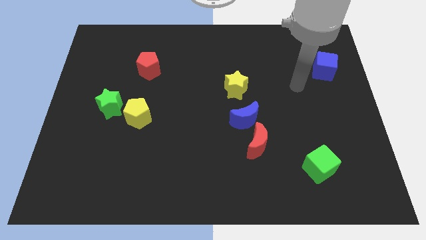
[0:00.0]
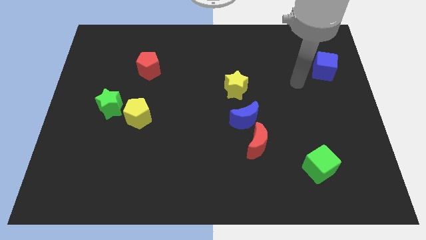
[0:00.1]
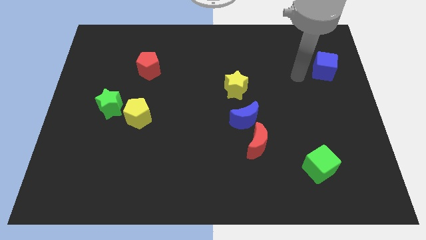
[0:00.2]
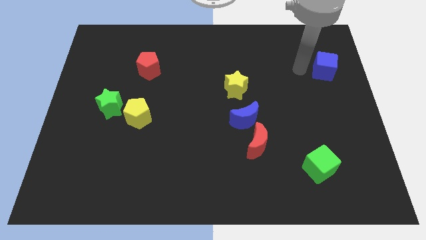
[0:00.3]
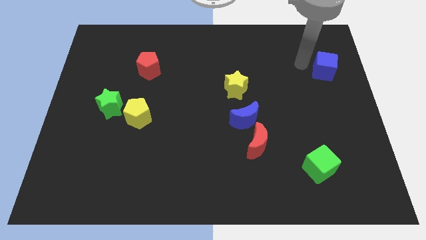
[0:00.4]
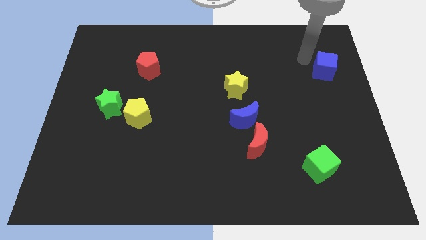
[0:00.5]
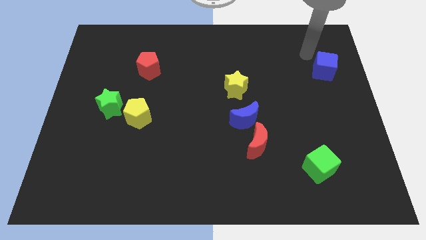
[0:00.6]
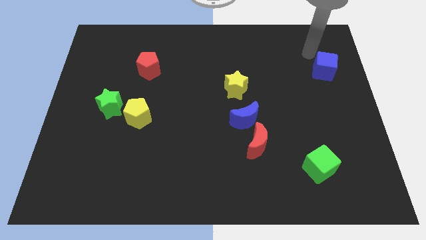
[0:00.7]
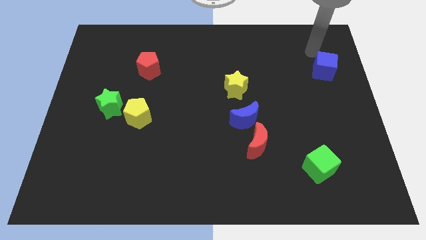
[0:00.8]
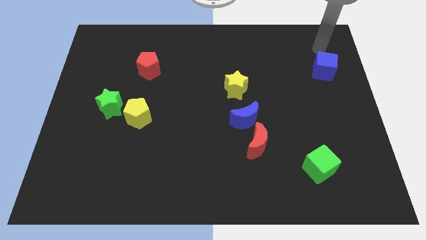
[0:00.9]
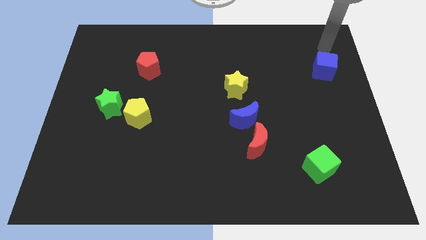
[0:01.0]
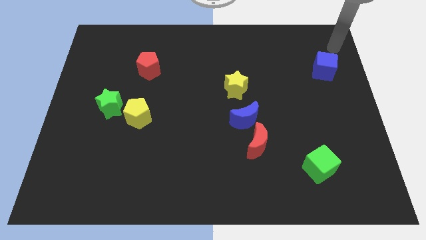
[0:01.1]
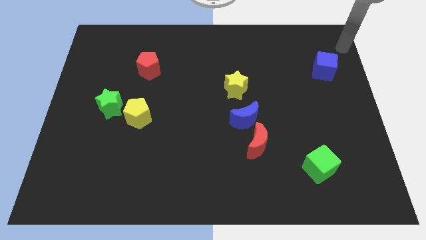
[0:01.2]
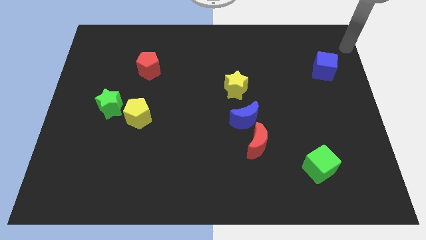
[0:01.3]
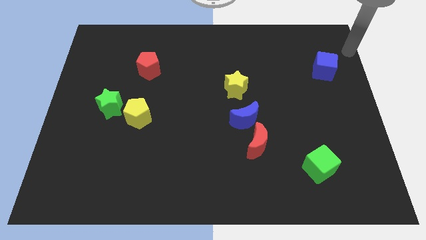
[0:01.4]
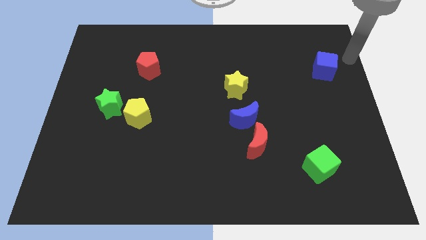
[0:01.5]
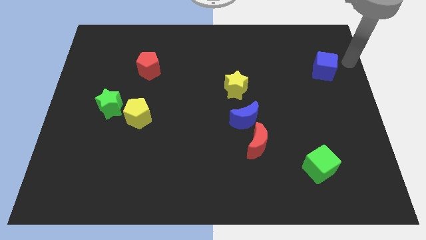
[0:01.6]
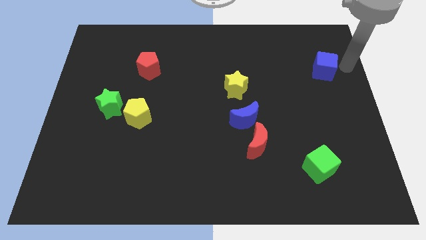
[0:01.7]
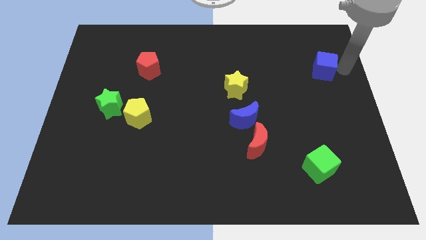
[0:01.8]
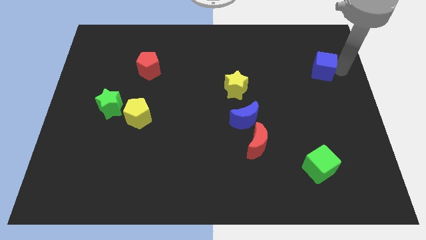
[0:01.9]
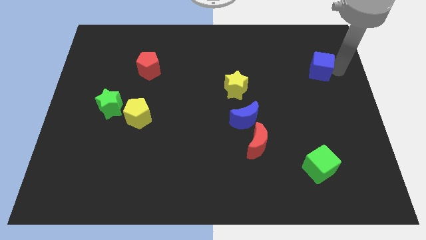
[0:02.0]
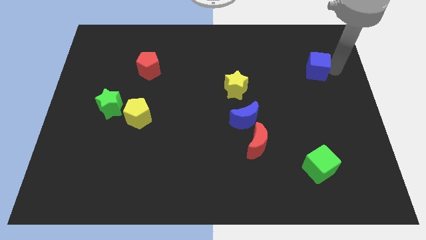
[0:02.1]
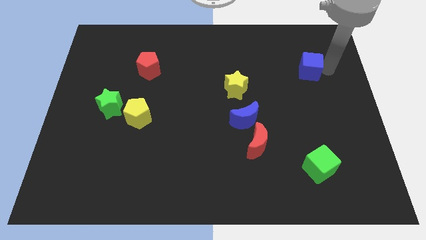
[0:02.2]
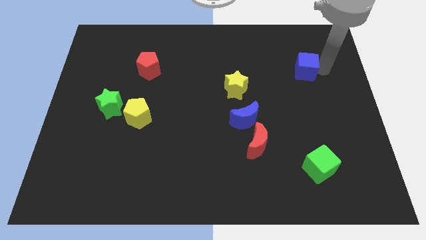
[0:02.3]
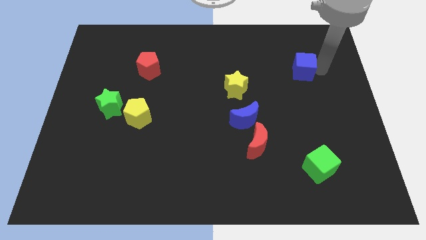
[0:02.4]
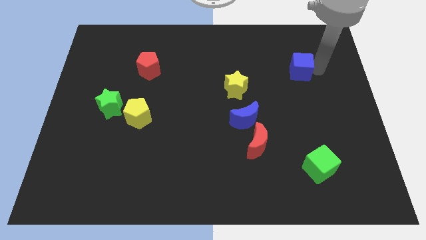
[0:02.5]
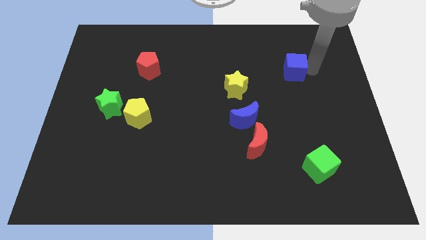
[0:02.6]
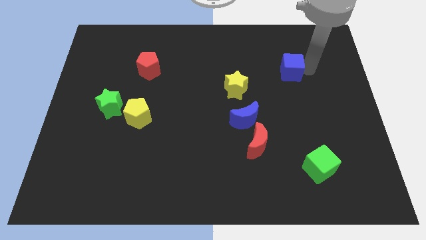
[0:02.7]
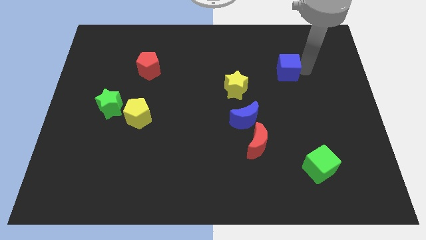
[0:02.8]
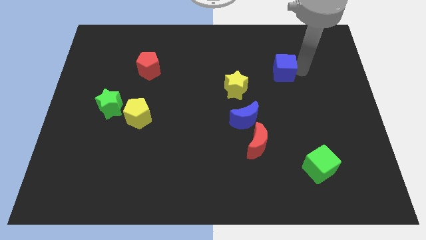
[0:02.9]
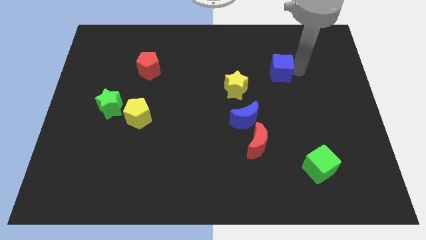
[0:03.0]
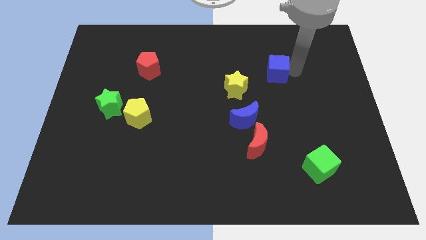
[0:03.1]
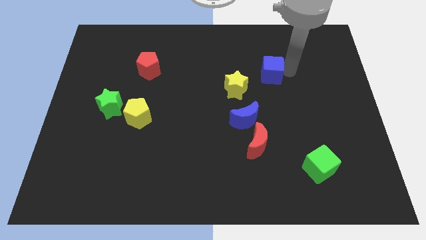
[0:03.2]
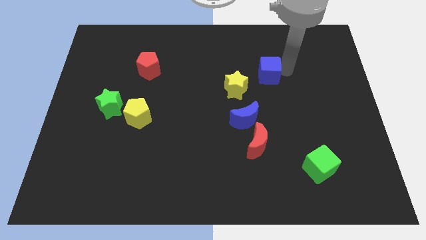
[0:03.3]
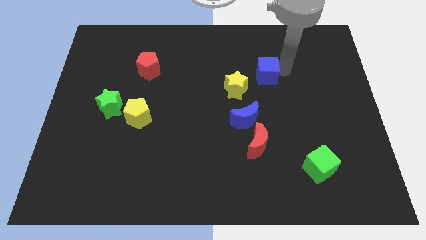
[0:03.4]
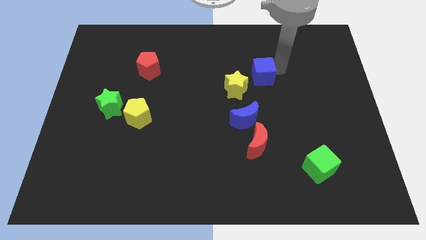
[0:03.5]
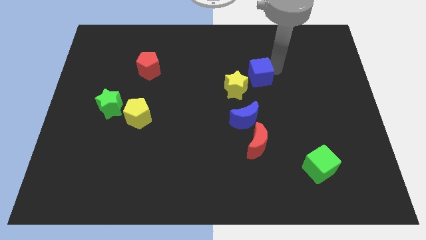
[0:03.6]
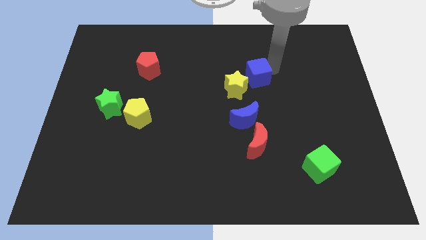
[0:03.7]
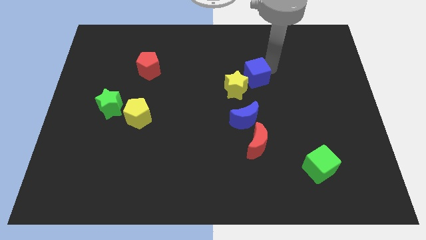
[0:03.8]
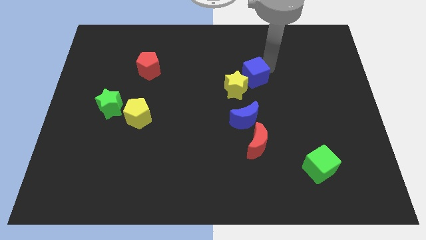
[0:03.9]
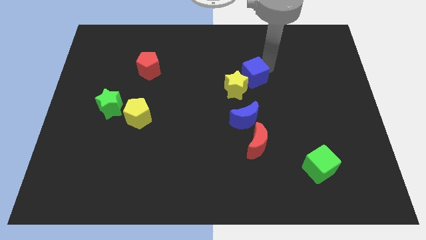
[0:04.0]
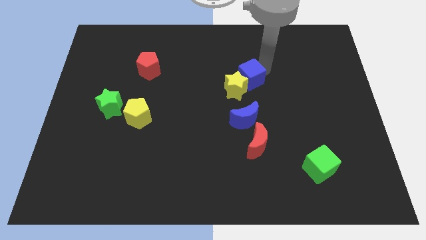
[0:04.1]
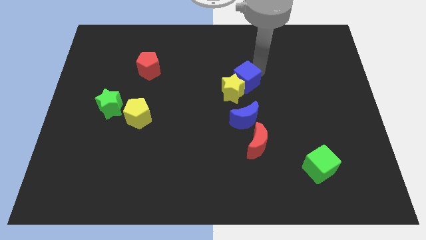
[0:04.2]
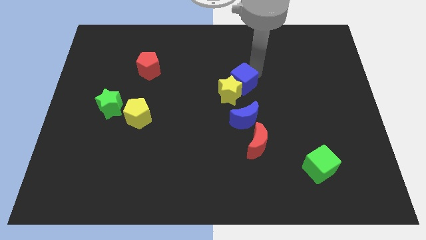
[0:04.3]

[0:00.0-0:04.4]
push the blue cube next to the yellow star

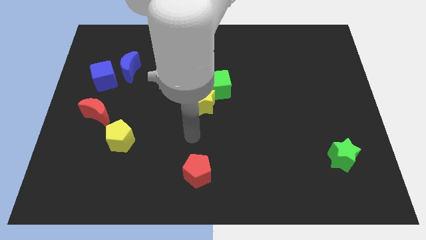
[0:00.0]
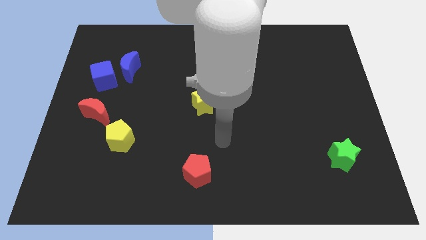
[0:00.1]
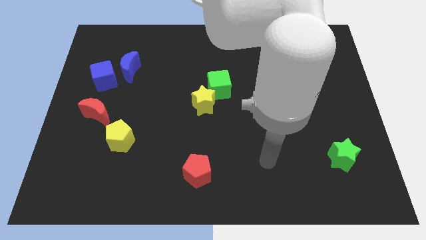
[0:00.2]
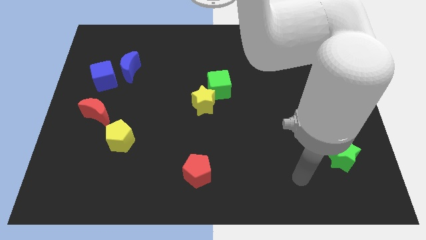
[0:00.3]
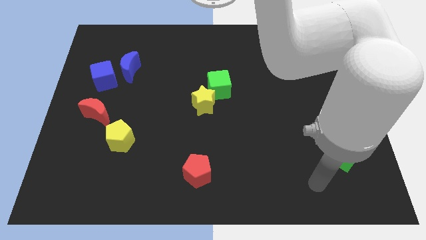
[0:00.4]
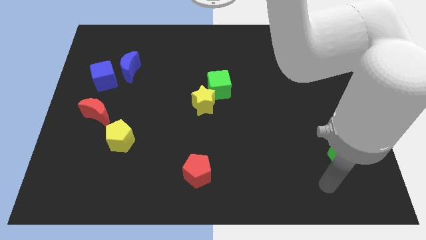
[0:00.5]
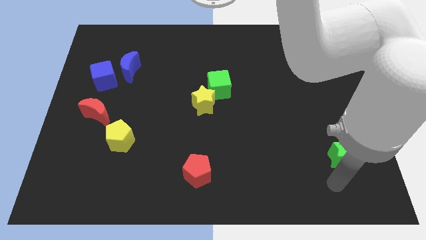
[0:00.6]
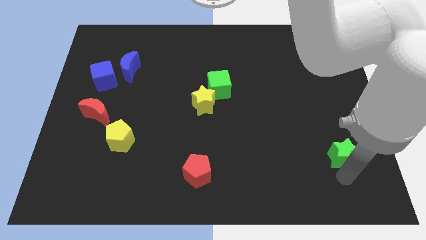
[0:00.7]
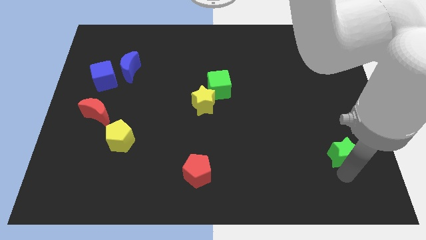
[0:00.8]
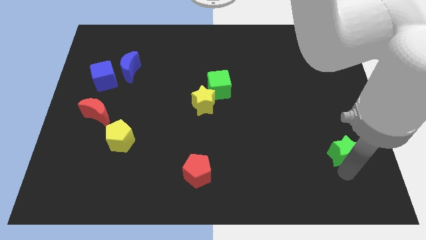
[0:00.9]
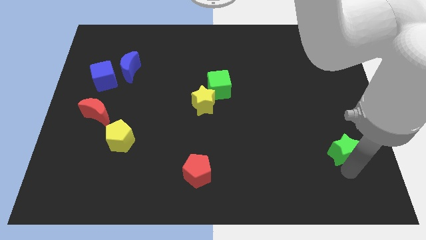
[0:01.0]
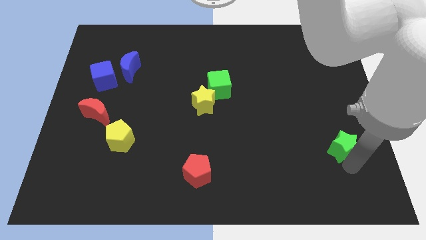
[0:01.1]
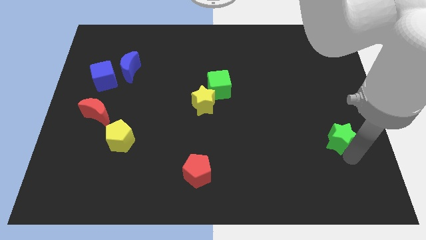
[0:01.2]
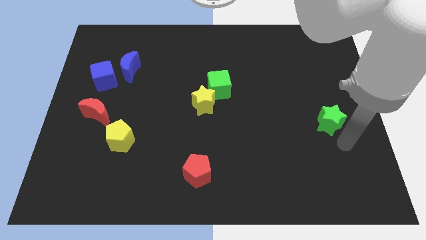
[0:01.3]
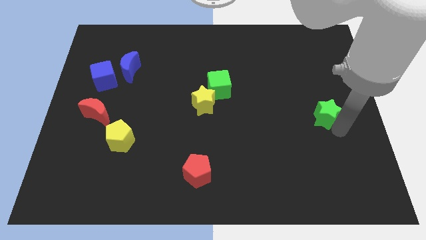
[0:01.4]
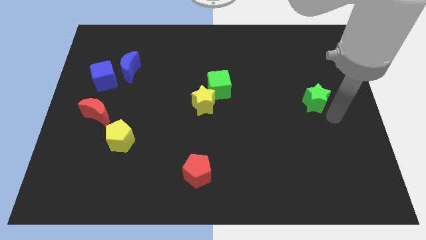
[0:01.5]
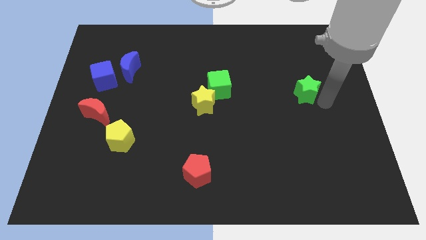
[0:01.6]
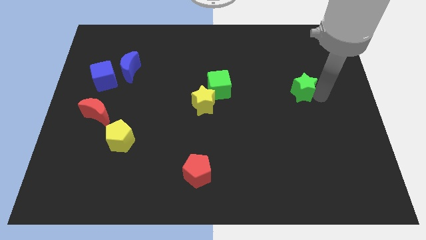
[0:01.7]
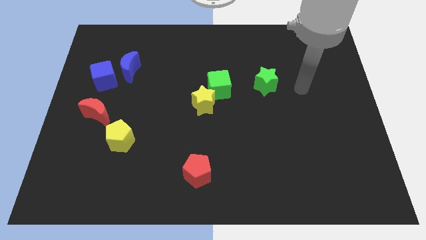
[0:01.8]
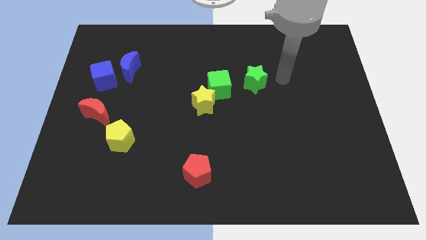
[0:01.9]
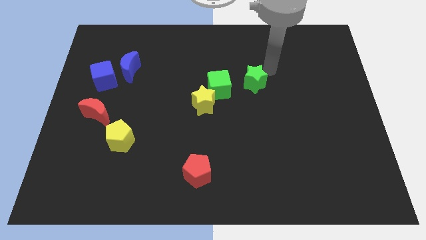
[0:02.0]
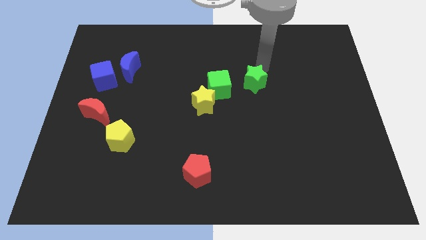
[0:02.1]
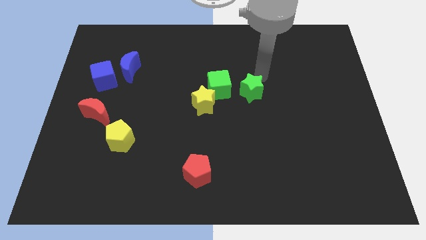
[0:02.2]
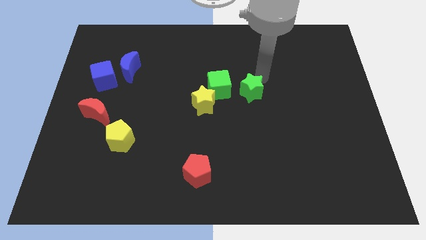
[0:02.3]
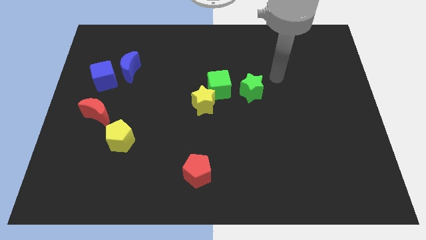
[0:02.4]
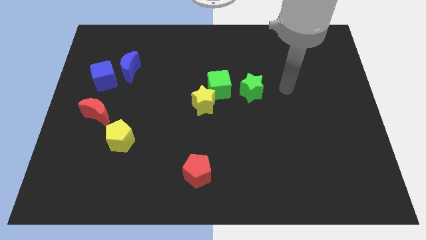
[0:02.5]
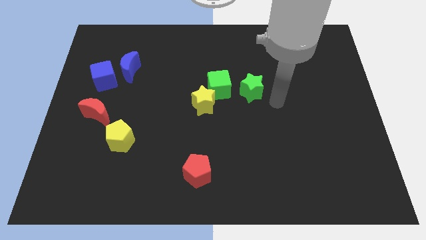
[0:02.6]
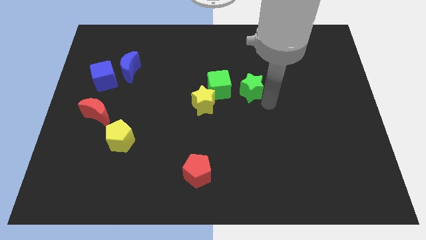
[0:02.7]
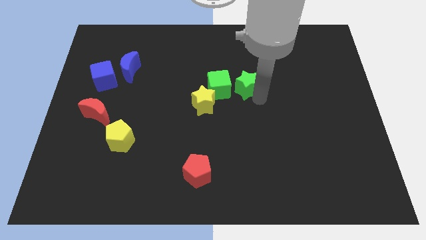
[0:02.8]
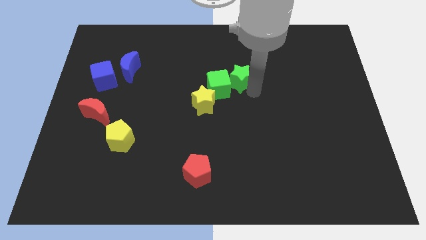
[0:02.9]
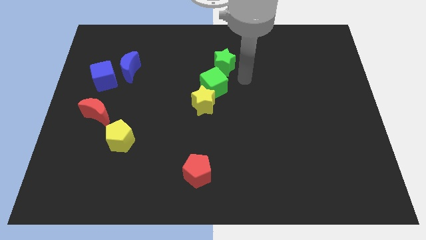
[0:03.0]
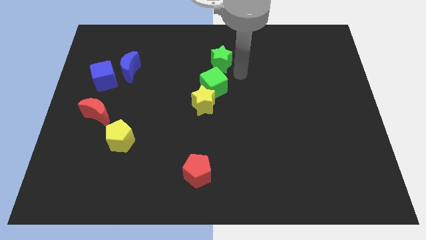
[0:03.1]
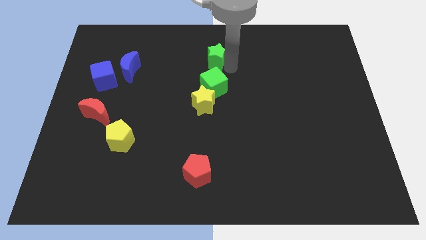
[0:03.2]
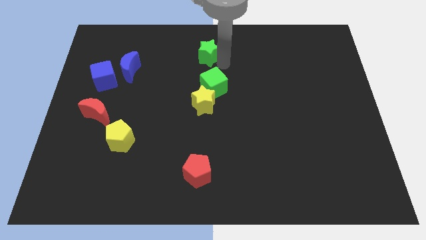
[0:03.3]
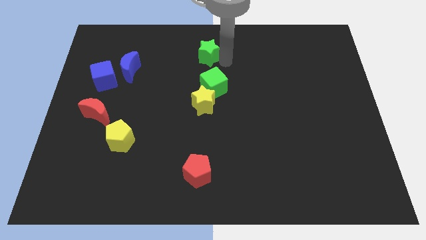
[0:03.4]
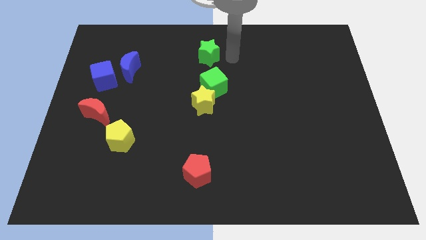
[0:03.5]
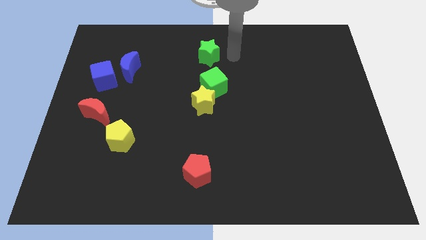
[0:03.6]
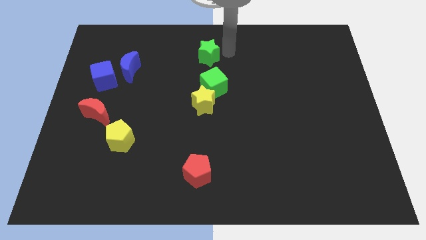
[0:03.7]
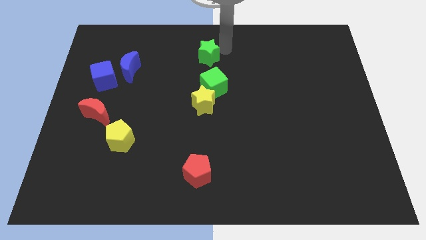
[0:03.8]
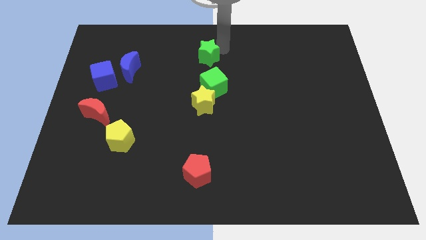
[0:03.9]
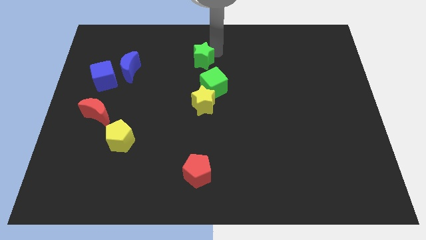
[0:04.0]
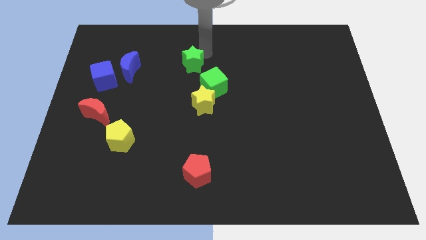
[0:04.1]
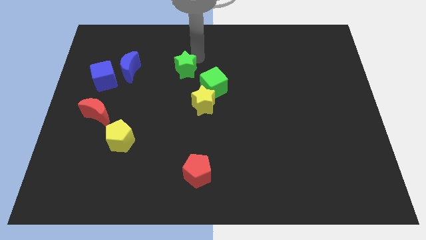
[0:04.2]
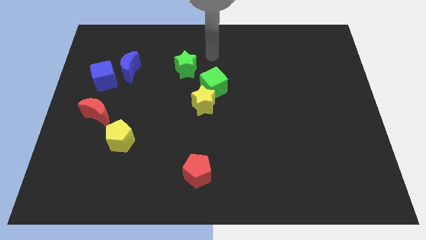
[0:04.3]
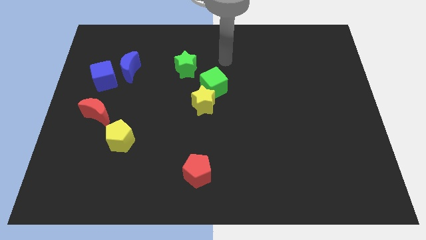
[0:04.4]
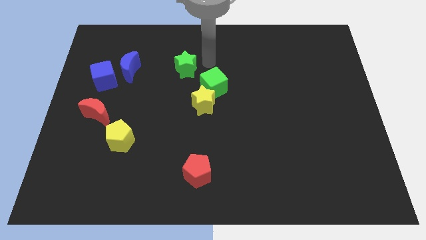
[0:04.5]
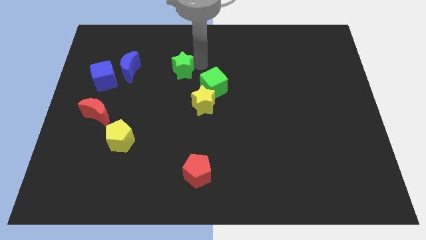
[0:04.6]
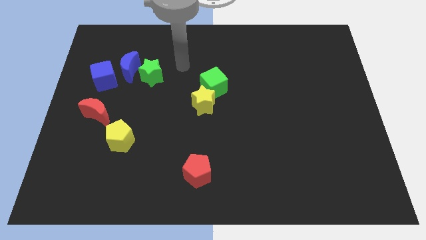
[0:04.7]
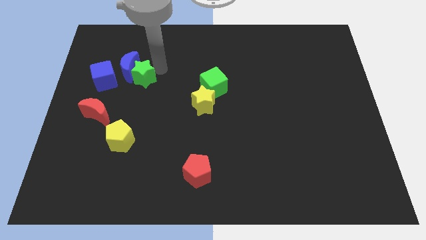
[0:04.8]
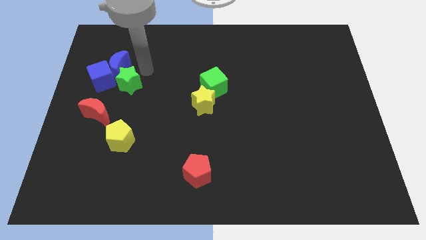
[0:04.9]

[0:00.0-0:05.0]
move the green star to the blue moon
